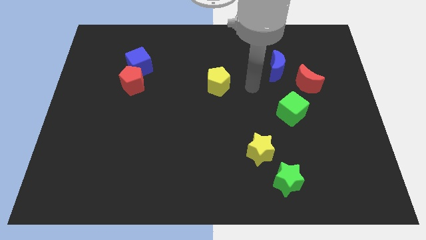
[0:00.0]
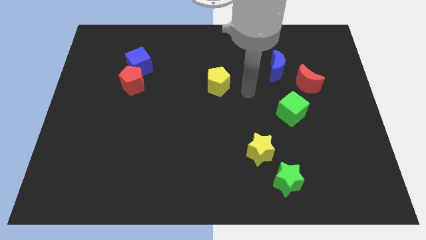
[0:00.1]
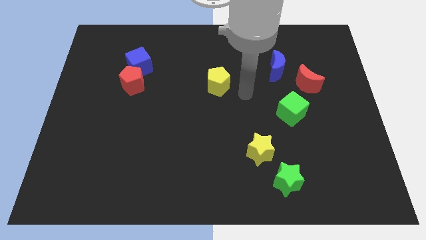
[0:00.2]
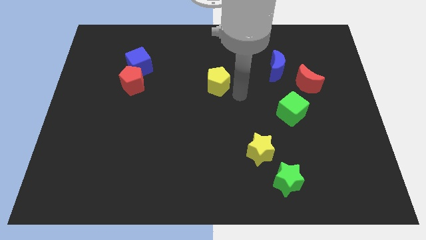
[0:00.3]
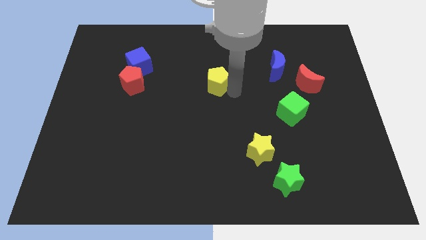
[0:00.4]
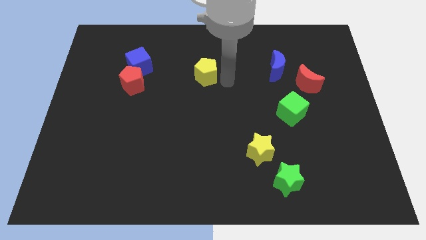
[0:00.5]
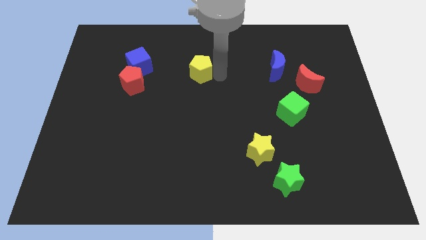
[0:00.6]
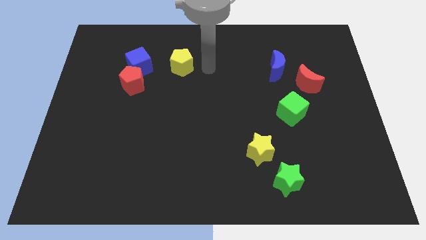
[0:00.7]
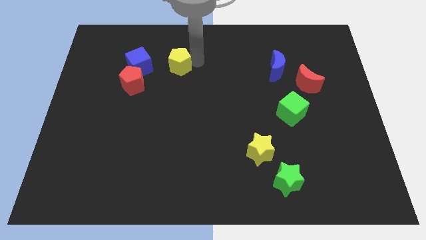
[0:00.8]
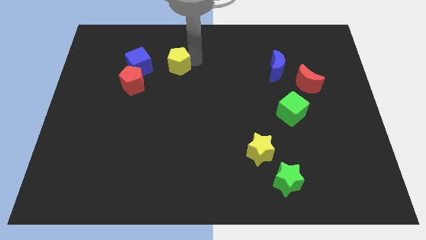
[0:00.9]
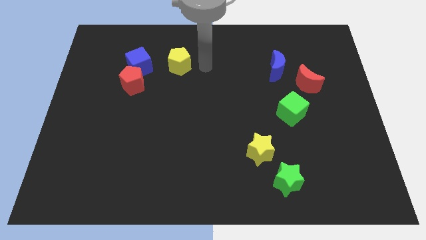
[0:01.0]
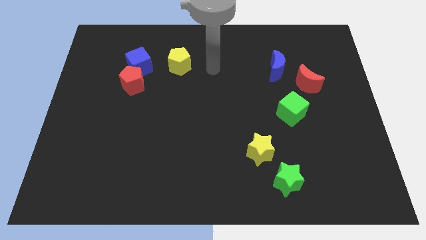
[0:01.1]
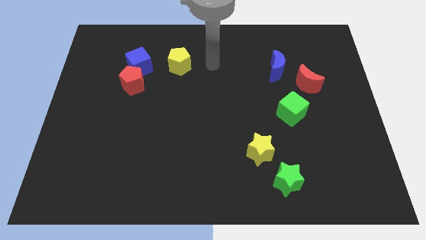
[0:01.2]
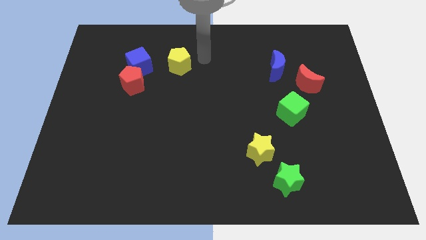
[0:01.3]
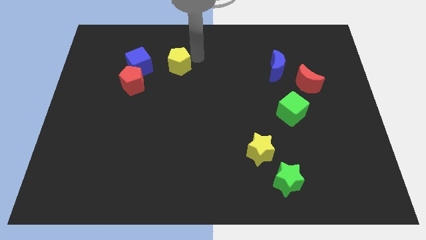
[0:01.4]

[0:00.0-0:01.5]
push the yellow pentagon to the right of the blue cube

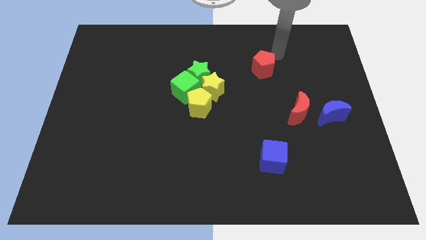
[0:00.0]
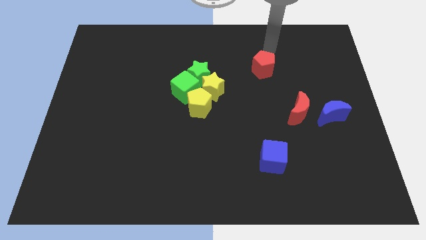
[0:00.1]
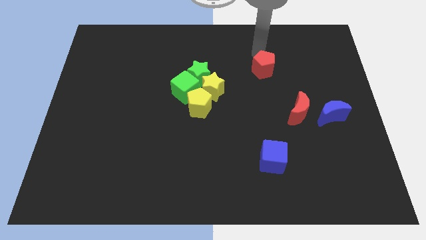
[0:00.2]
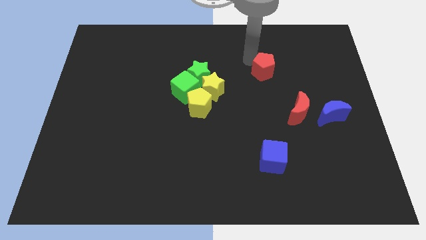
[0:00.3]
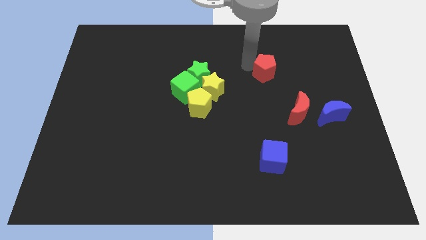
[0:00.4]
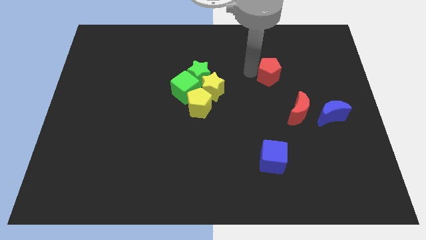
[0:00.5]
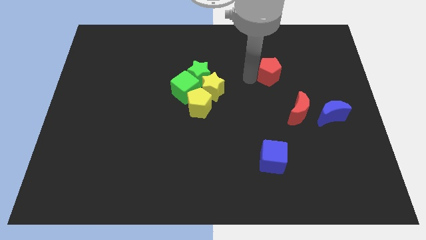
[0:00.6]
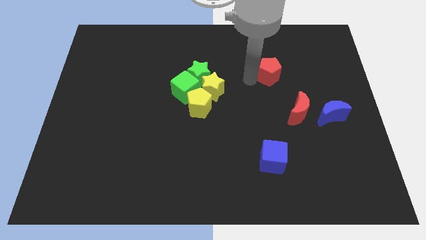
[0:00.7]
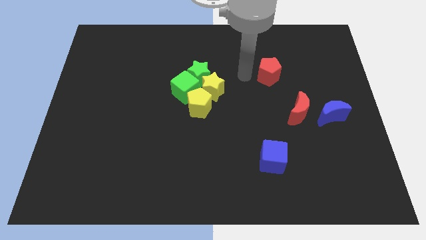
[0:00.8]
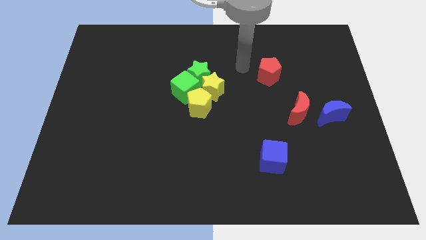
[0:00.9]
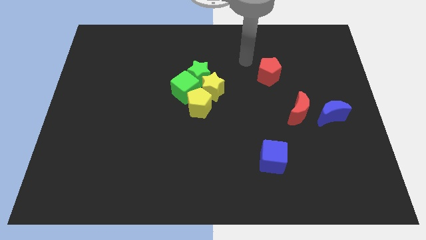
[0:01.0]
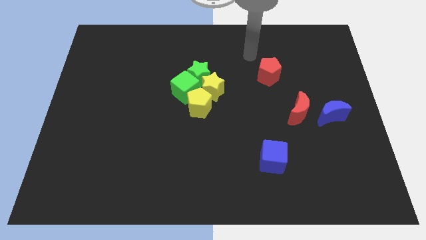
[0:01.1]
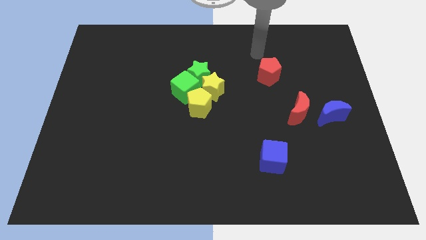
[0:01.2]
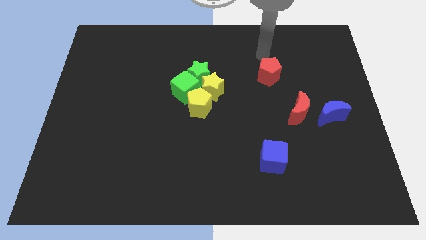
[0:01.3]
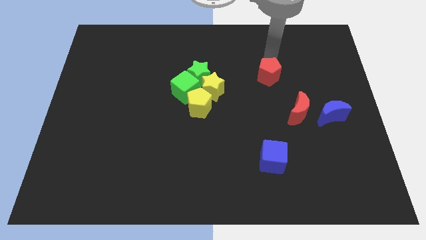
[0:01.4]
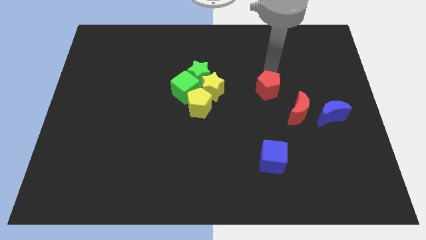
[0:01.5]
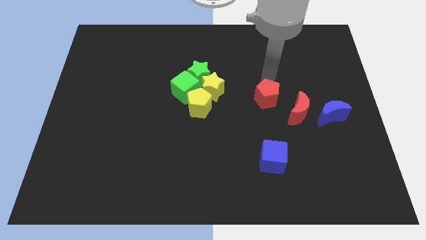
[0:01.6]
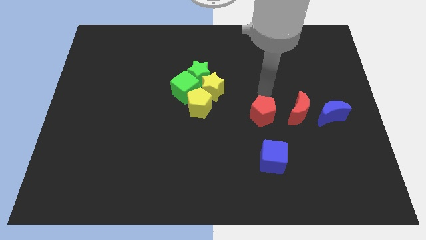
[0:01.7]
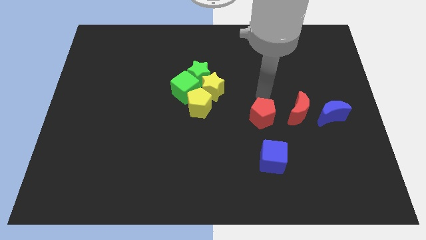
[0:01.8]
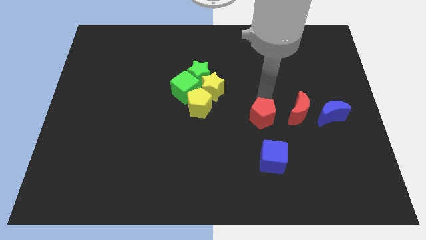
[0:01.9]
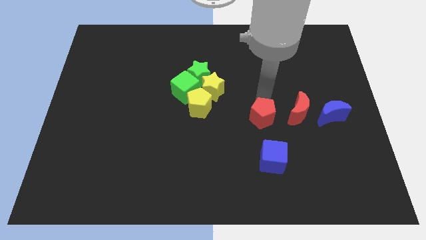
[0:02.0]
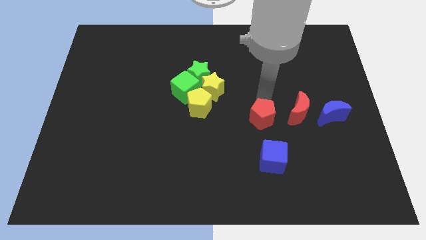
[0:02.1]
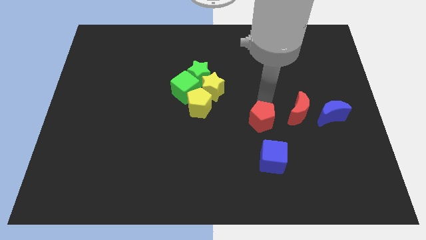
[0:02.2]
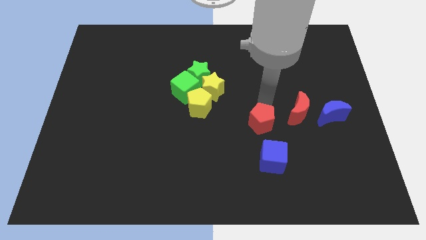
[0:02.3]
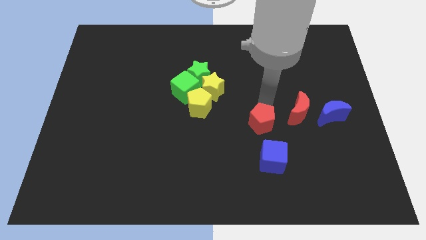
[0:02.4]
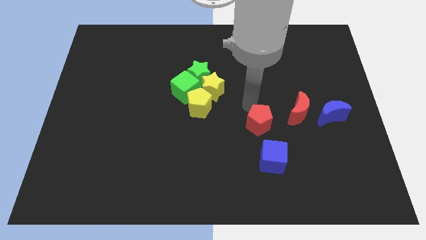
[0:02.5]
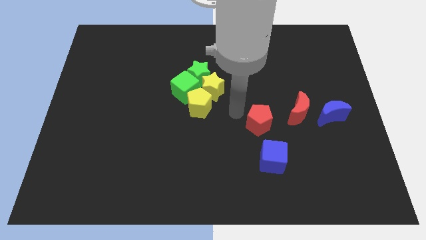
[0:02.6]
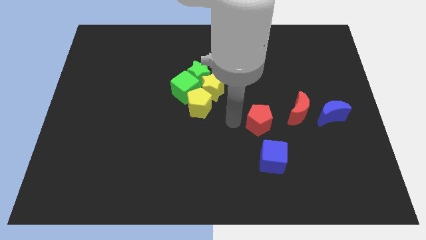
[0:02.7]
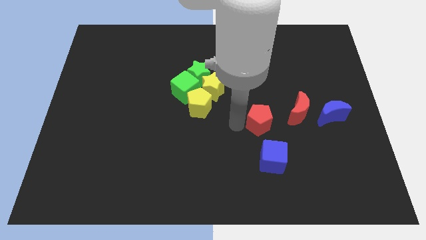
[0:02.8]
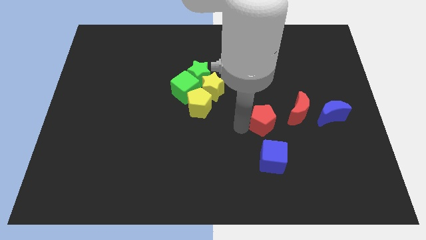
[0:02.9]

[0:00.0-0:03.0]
move the red pentagon above the blue cube

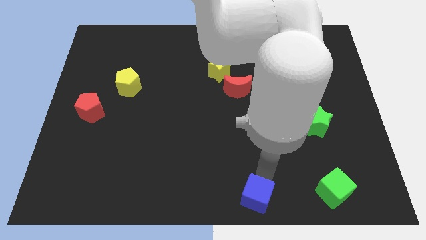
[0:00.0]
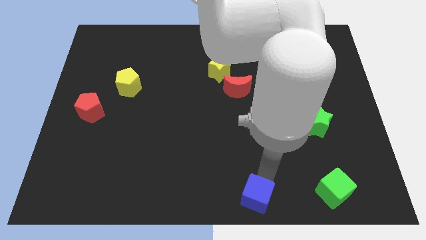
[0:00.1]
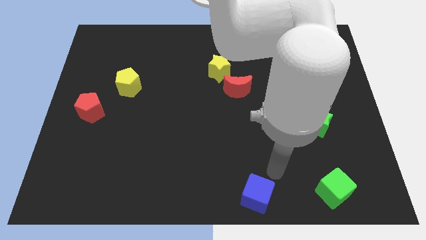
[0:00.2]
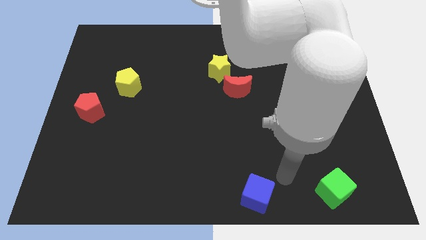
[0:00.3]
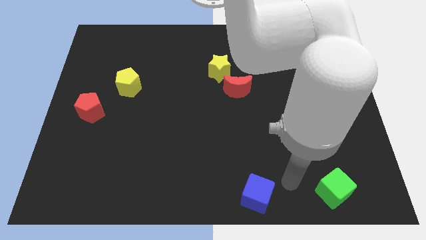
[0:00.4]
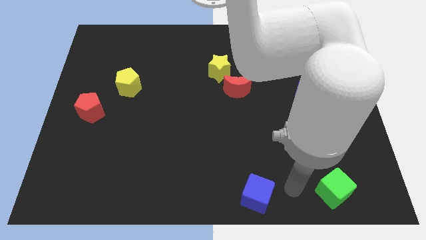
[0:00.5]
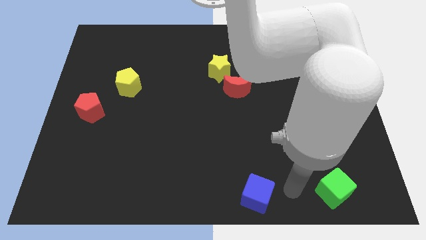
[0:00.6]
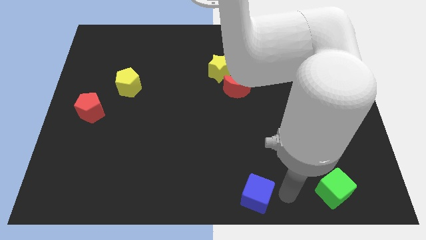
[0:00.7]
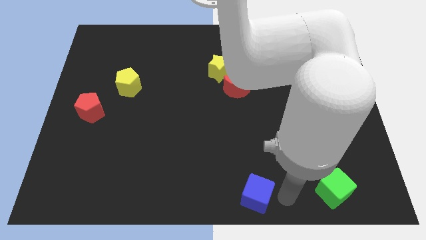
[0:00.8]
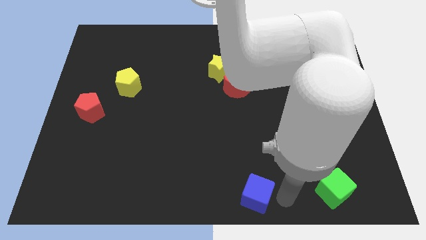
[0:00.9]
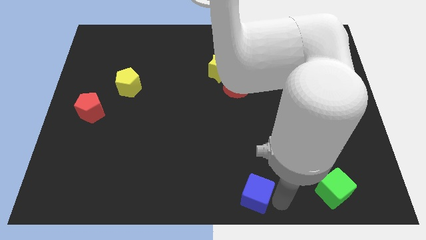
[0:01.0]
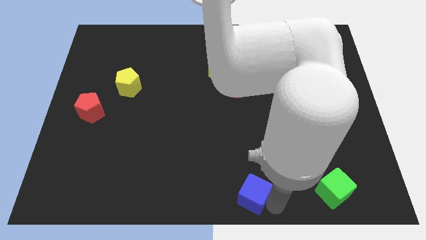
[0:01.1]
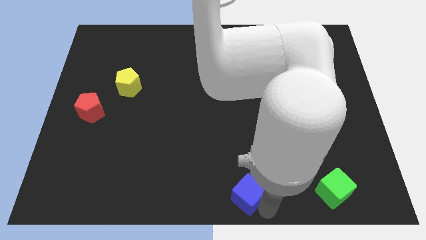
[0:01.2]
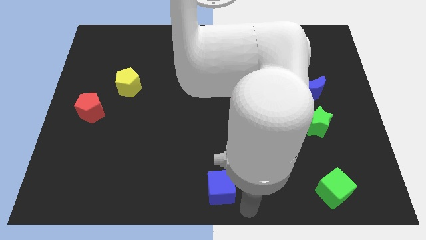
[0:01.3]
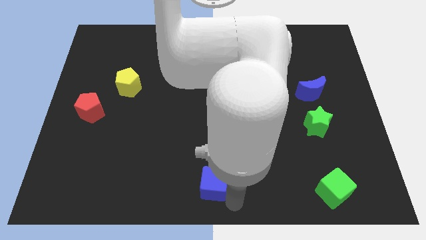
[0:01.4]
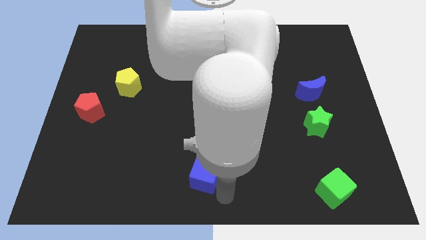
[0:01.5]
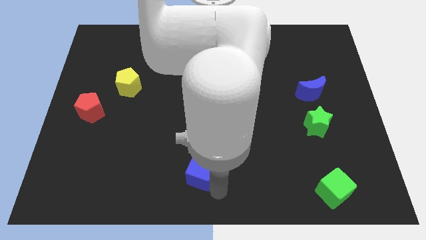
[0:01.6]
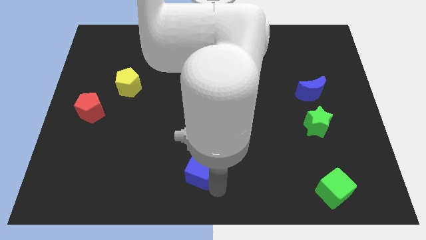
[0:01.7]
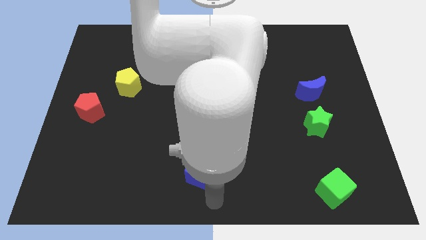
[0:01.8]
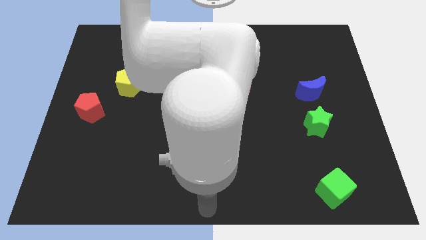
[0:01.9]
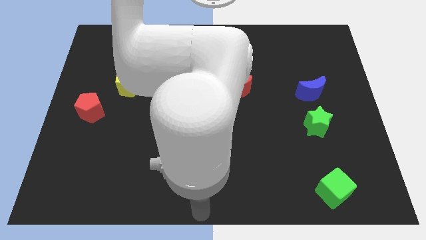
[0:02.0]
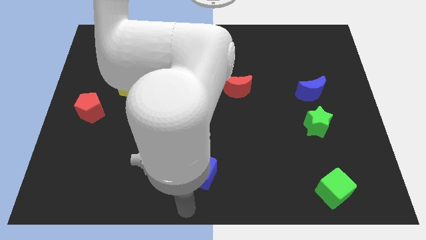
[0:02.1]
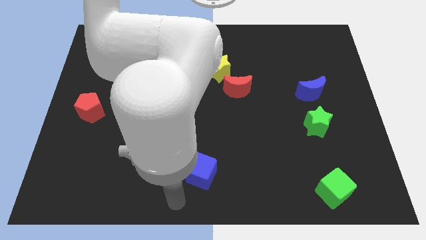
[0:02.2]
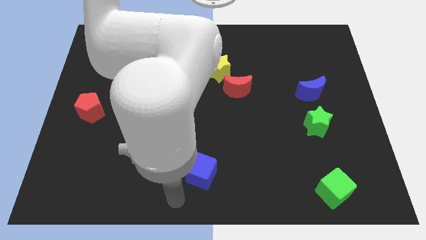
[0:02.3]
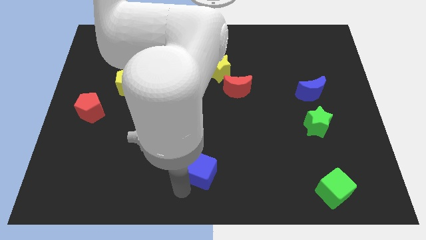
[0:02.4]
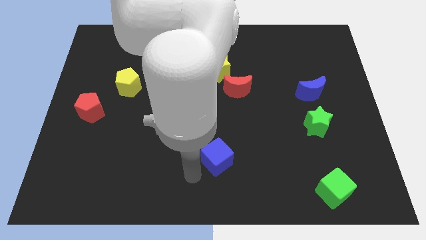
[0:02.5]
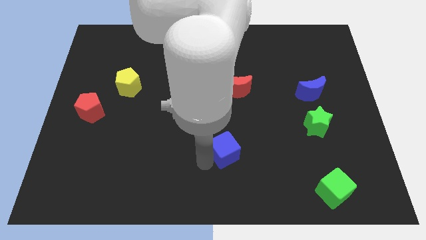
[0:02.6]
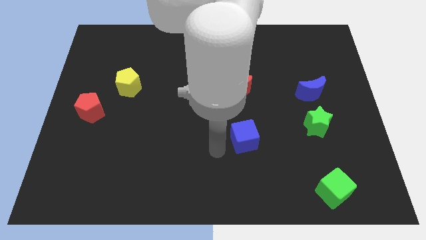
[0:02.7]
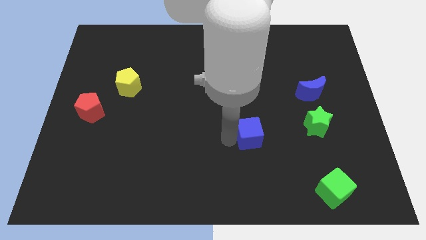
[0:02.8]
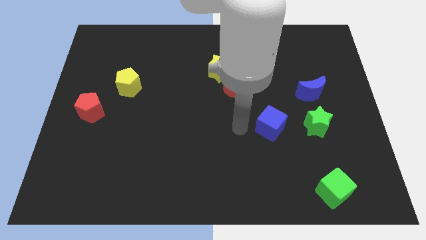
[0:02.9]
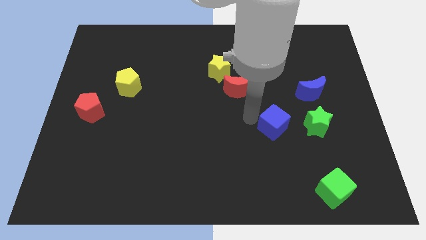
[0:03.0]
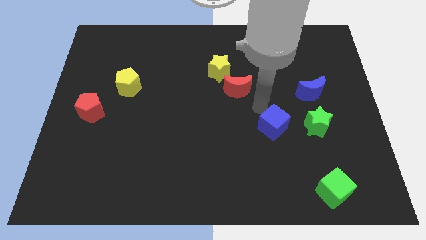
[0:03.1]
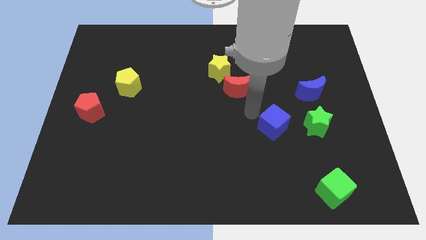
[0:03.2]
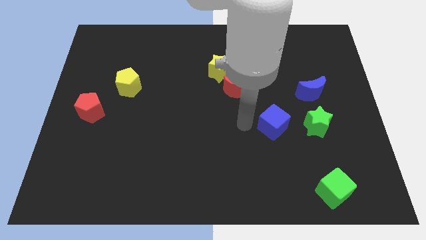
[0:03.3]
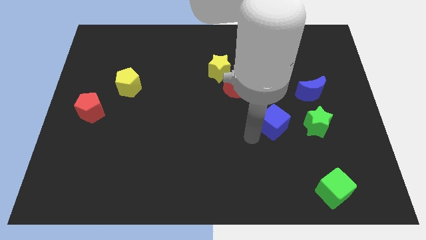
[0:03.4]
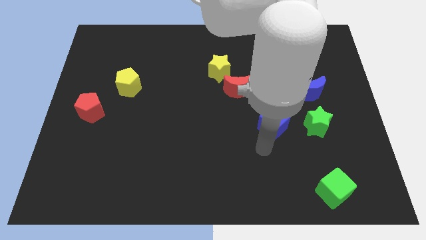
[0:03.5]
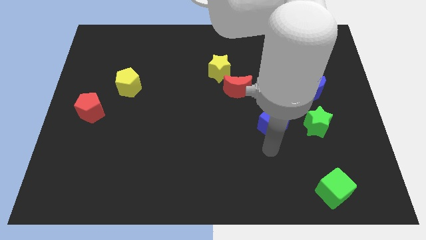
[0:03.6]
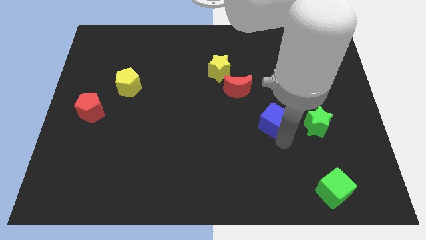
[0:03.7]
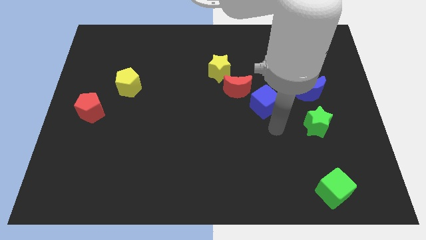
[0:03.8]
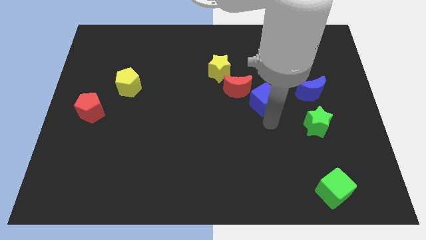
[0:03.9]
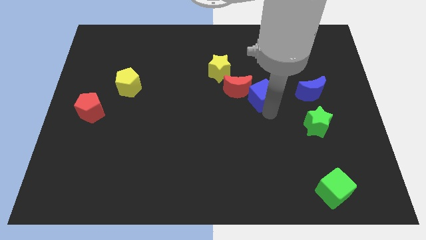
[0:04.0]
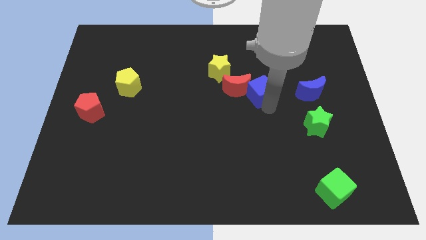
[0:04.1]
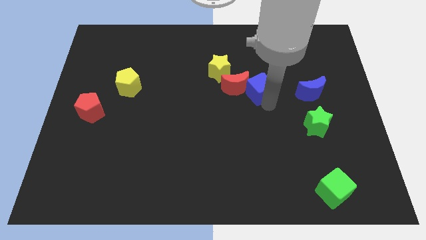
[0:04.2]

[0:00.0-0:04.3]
move the blue cube into the red crescent

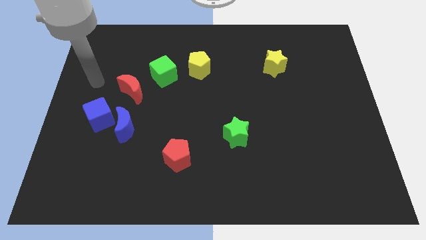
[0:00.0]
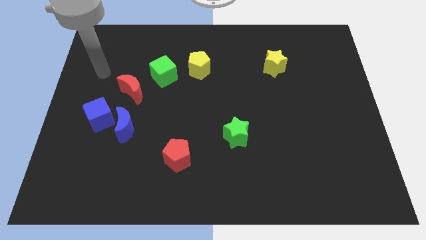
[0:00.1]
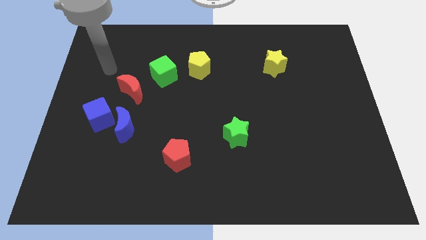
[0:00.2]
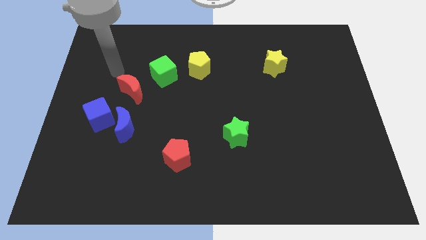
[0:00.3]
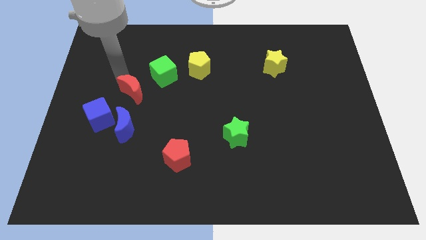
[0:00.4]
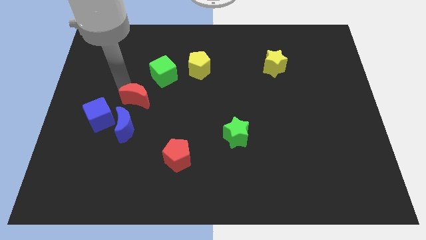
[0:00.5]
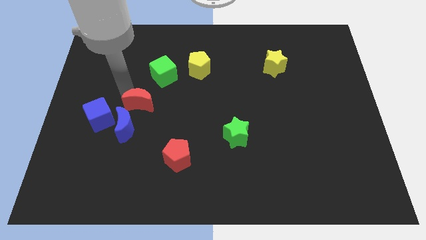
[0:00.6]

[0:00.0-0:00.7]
slightly push the red crescent
